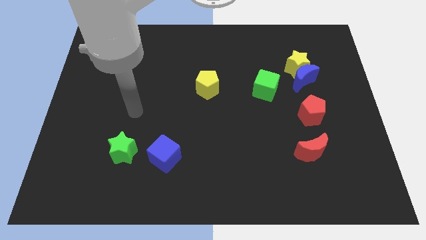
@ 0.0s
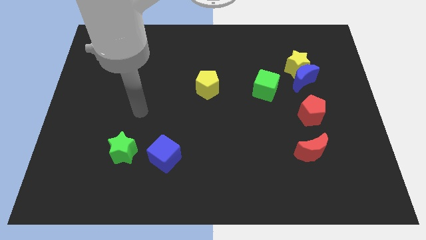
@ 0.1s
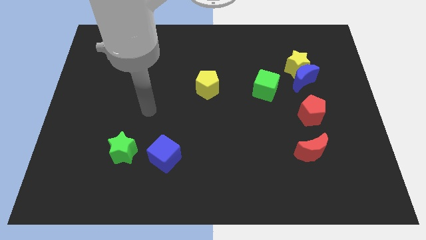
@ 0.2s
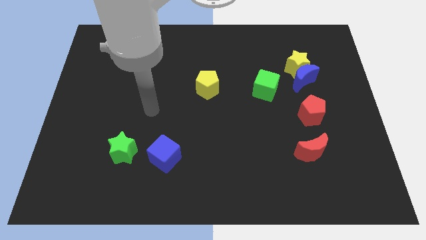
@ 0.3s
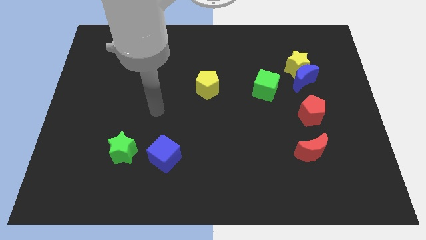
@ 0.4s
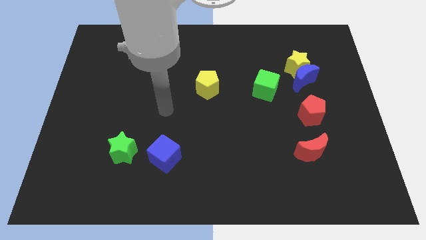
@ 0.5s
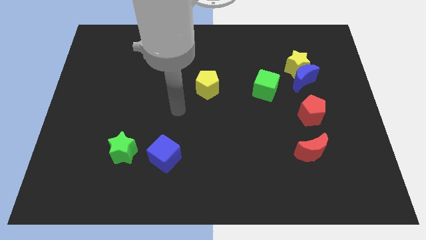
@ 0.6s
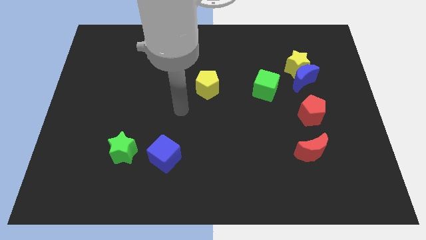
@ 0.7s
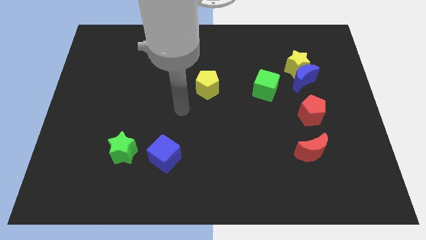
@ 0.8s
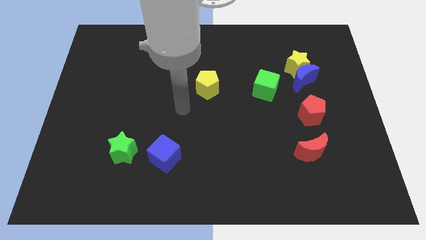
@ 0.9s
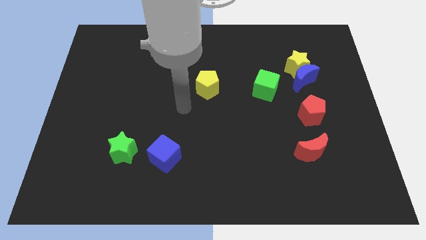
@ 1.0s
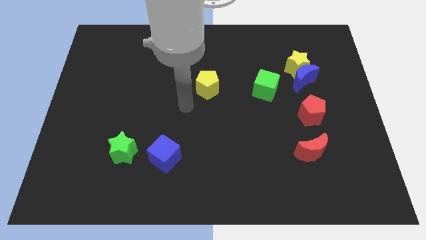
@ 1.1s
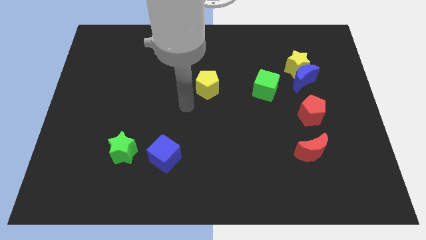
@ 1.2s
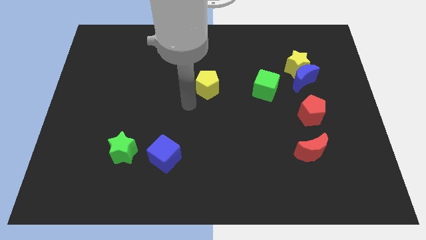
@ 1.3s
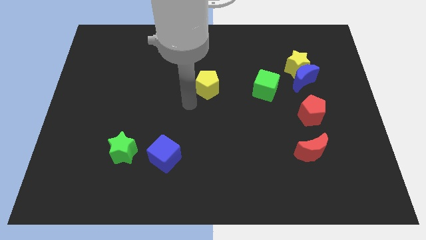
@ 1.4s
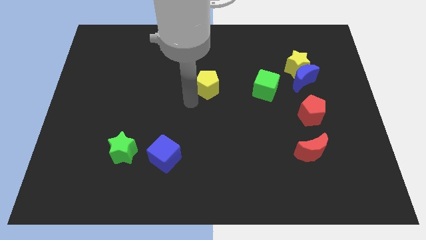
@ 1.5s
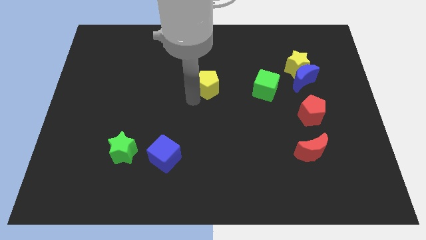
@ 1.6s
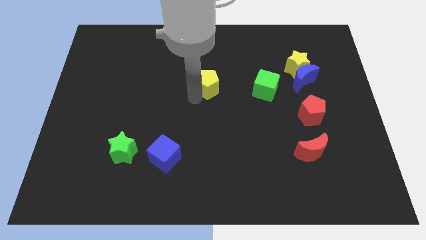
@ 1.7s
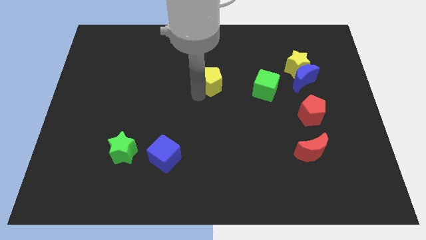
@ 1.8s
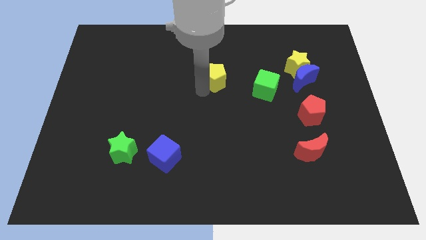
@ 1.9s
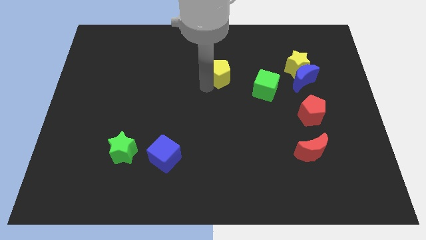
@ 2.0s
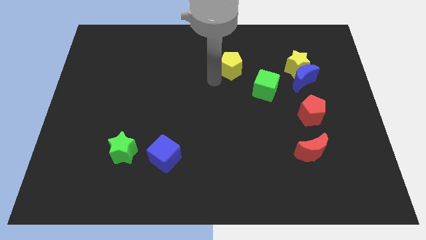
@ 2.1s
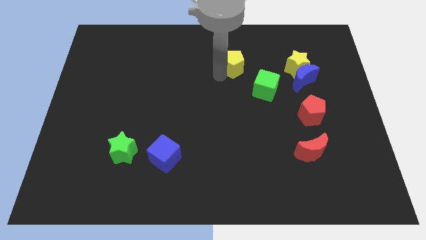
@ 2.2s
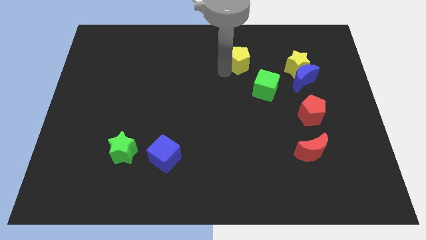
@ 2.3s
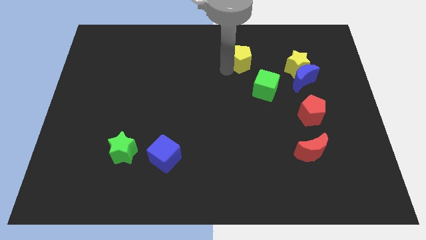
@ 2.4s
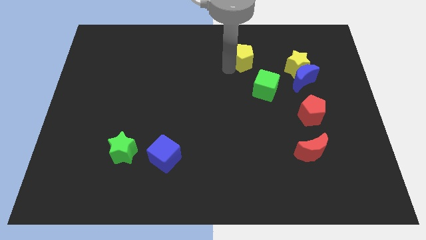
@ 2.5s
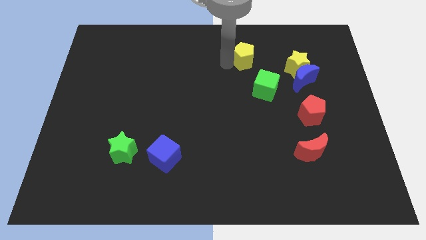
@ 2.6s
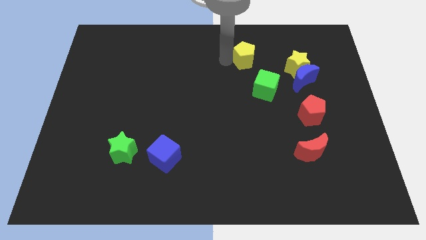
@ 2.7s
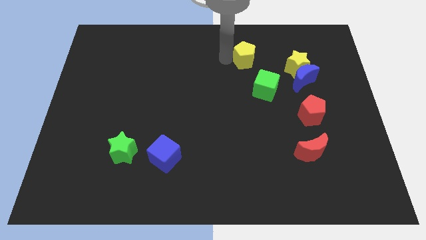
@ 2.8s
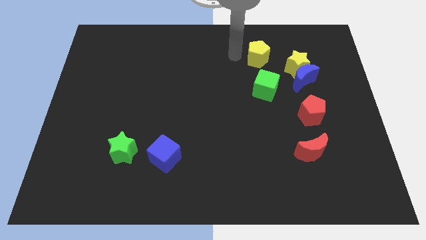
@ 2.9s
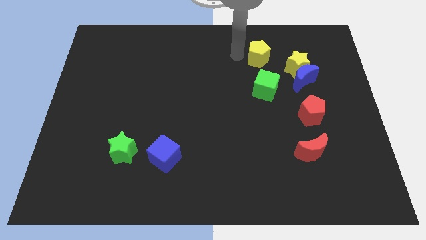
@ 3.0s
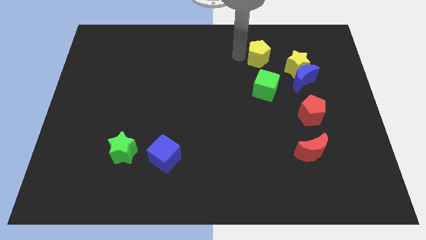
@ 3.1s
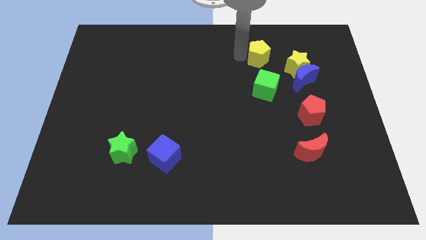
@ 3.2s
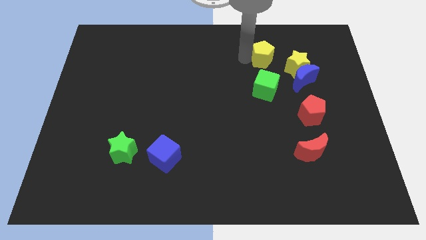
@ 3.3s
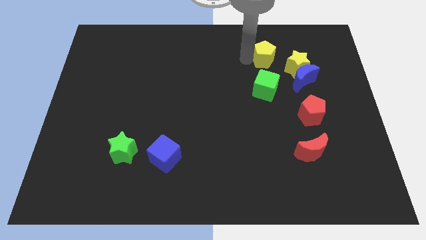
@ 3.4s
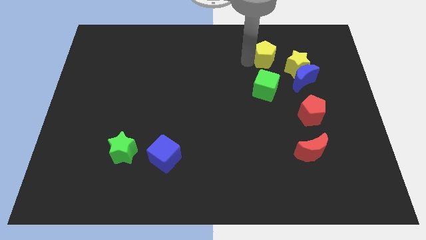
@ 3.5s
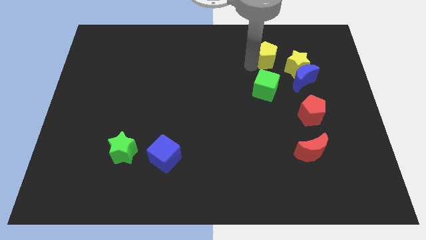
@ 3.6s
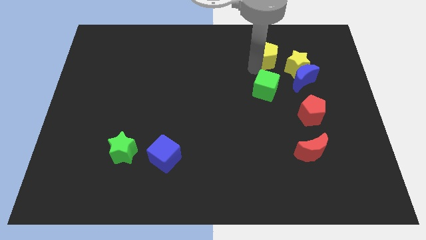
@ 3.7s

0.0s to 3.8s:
push the yellow pentagon to the left side of yellow star

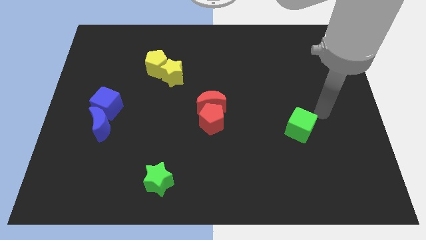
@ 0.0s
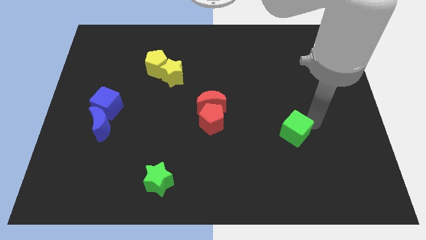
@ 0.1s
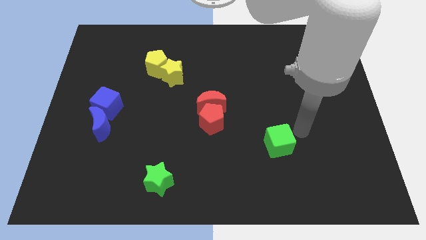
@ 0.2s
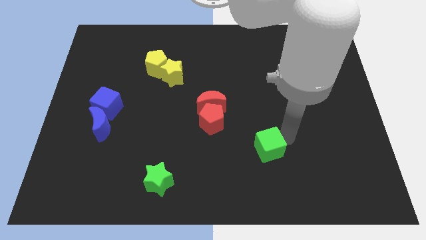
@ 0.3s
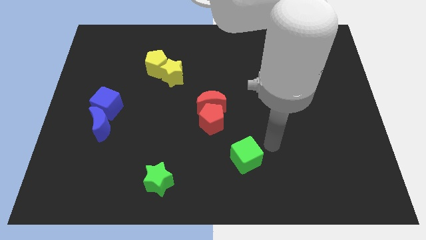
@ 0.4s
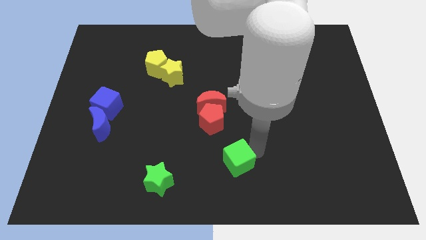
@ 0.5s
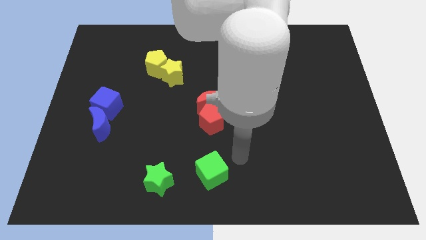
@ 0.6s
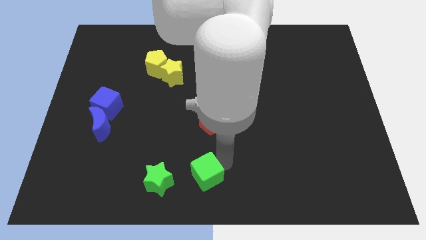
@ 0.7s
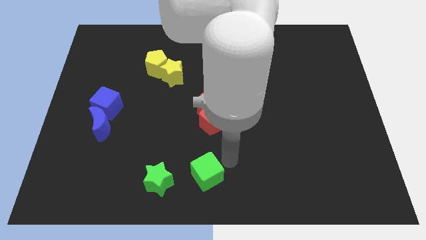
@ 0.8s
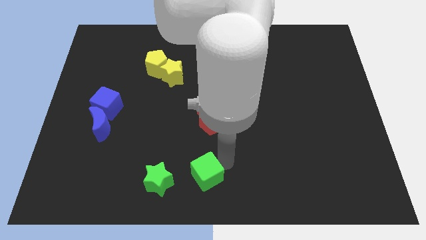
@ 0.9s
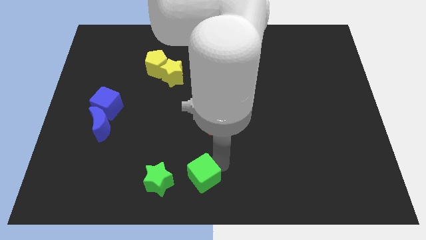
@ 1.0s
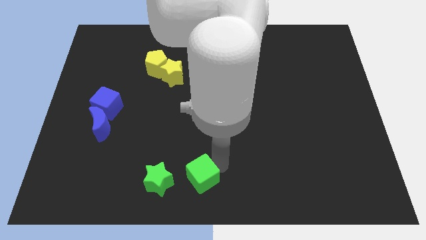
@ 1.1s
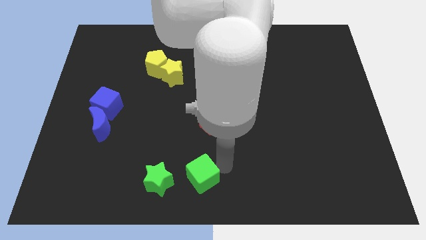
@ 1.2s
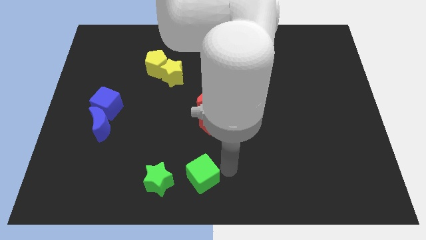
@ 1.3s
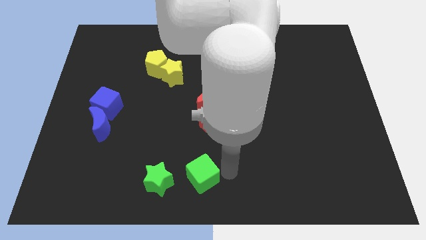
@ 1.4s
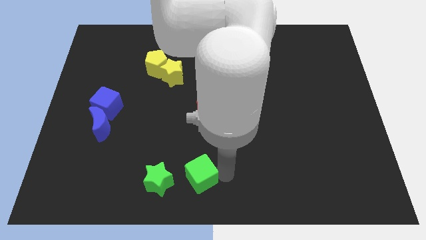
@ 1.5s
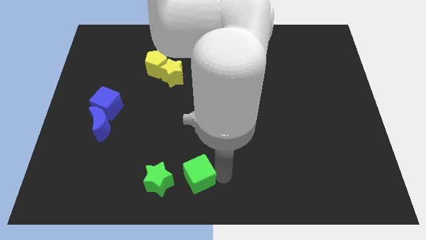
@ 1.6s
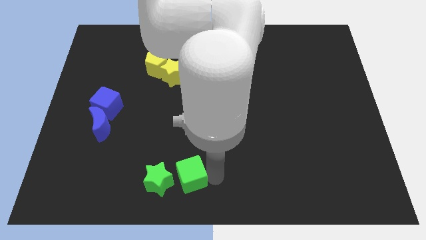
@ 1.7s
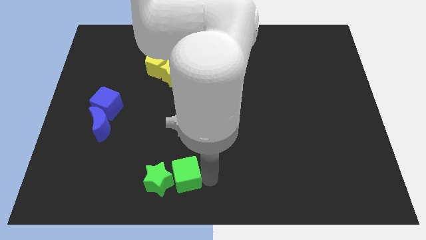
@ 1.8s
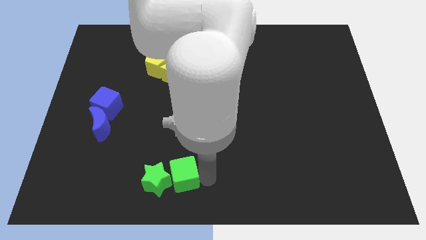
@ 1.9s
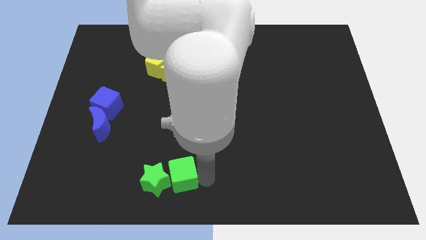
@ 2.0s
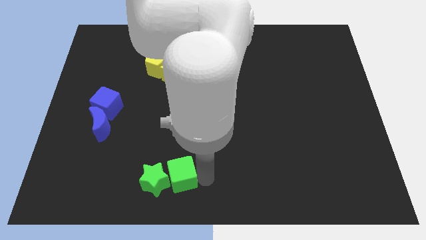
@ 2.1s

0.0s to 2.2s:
slide green cube into green star

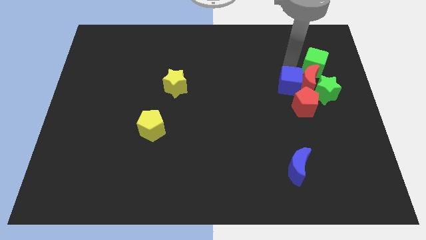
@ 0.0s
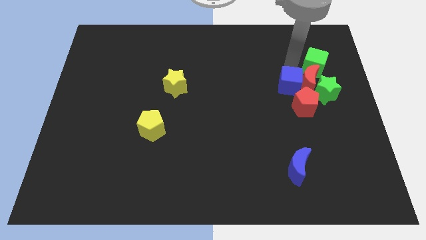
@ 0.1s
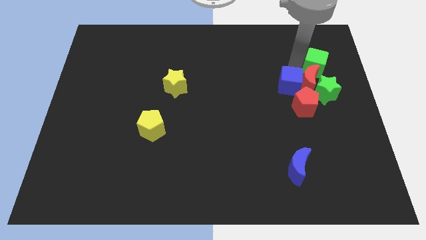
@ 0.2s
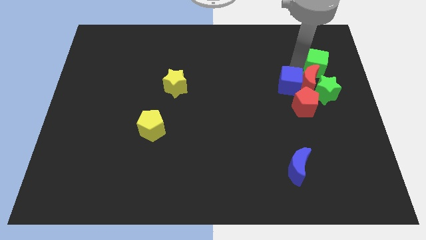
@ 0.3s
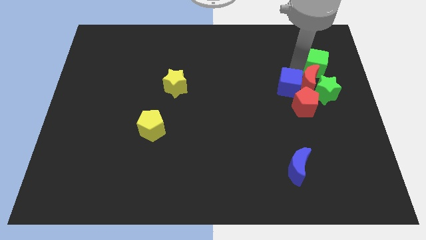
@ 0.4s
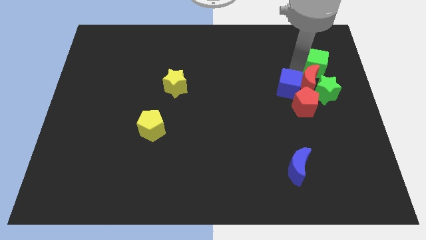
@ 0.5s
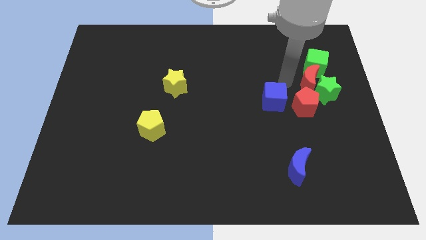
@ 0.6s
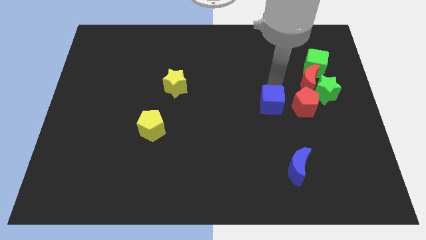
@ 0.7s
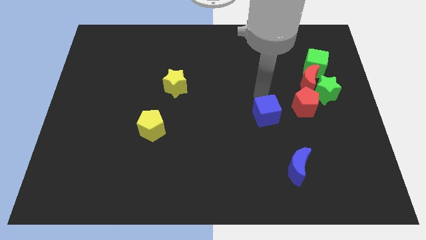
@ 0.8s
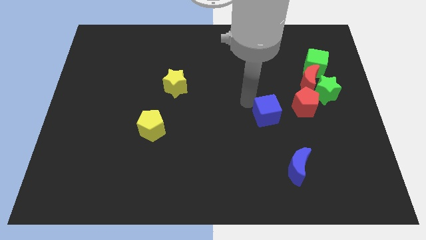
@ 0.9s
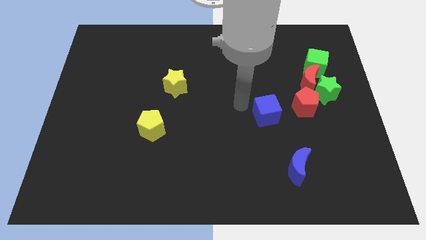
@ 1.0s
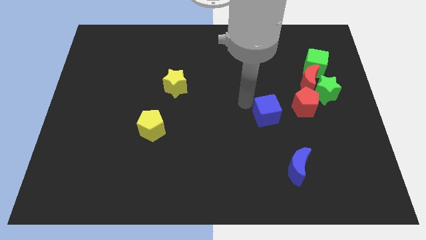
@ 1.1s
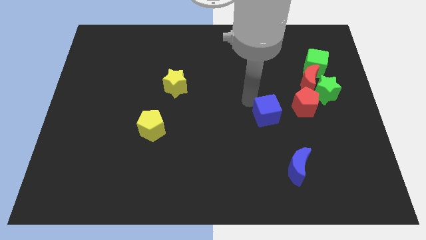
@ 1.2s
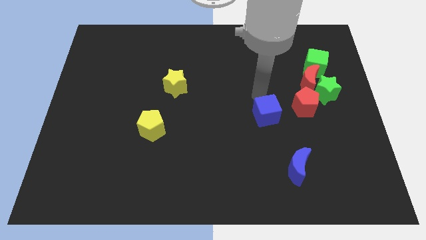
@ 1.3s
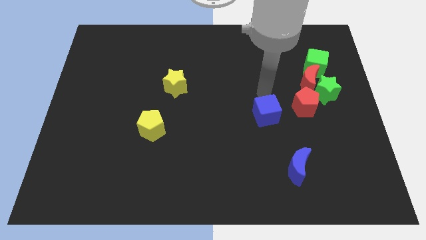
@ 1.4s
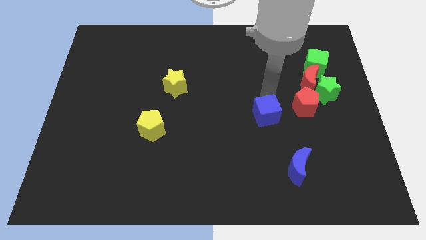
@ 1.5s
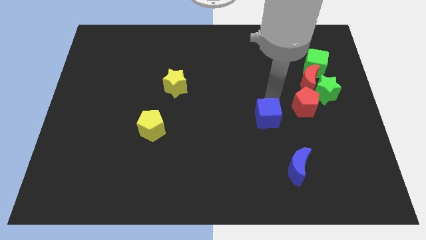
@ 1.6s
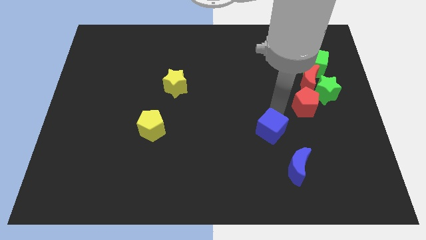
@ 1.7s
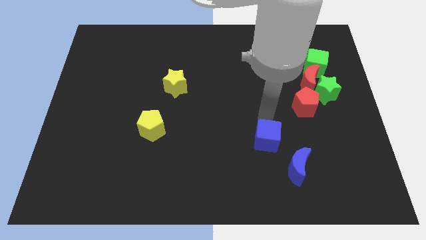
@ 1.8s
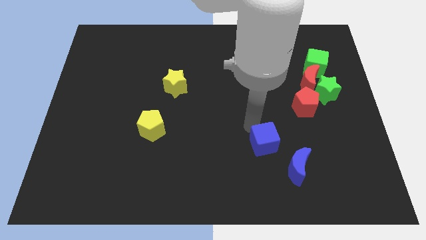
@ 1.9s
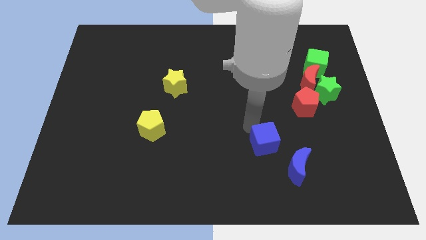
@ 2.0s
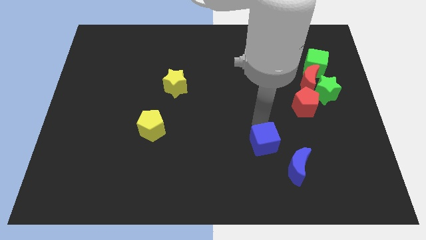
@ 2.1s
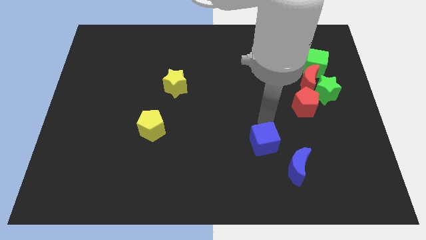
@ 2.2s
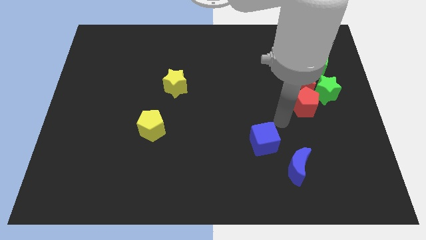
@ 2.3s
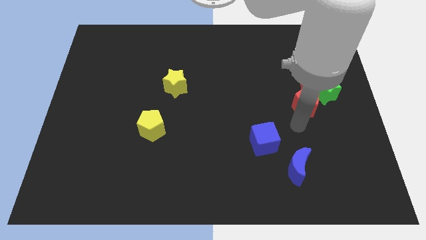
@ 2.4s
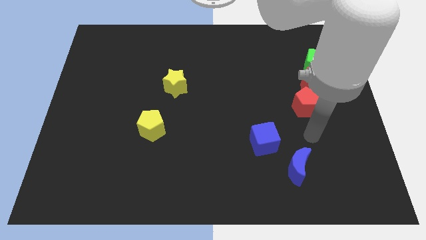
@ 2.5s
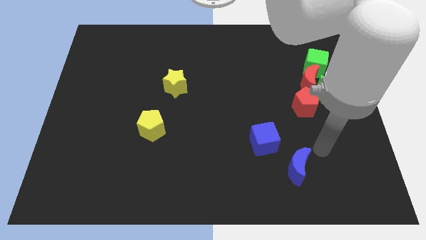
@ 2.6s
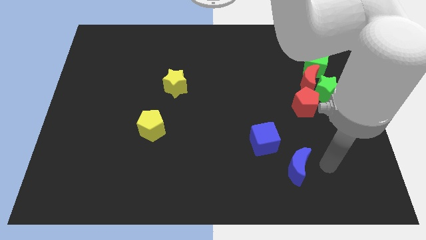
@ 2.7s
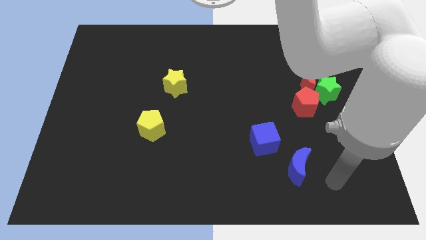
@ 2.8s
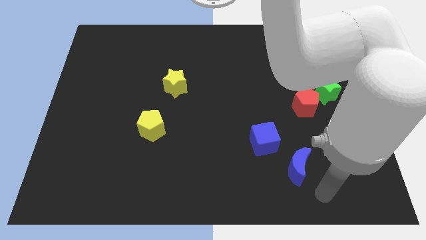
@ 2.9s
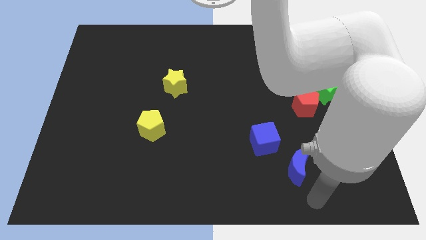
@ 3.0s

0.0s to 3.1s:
slide the blue cube downwards
